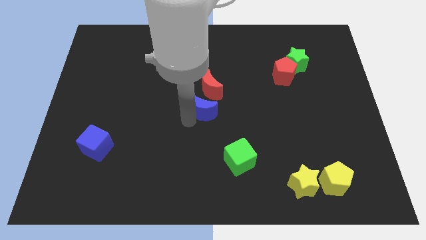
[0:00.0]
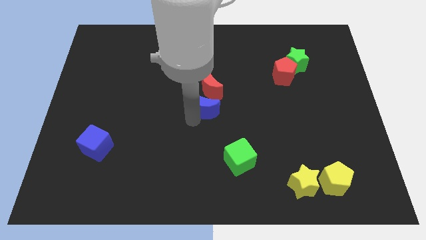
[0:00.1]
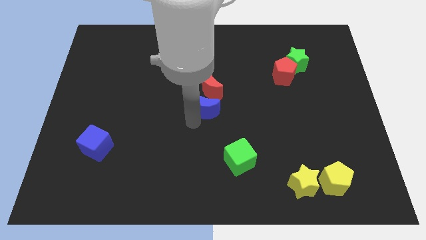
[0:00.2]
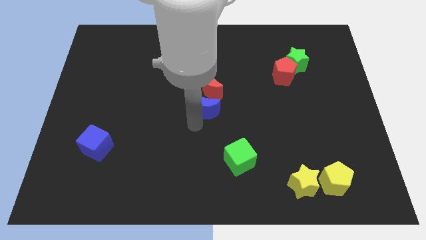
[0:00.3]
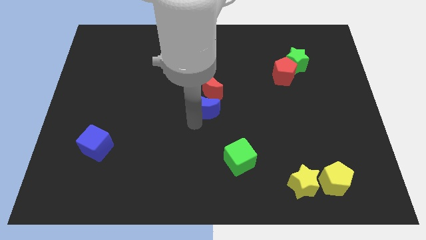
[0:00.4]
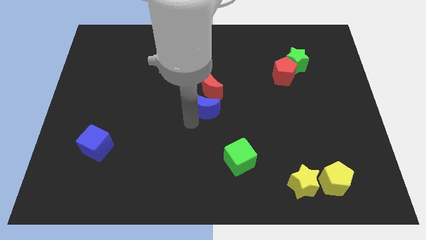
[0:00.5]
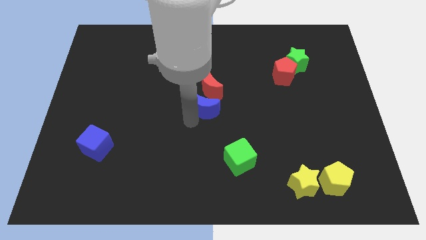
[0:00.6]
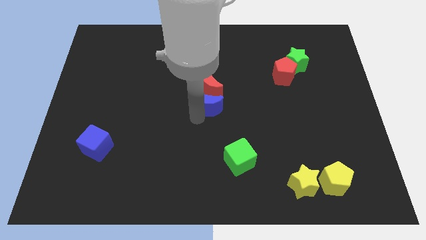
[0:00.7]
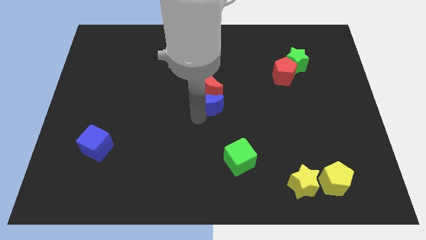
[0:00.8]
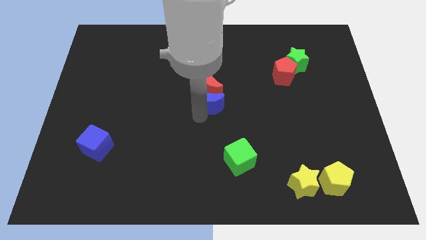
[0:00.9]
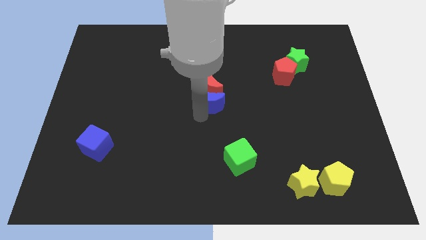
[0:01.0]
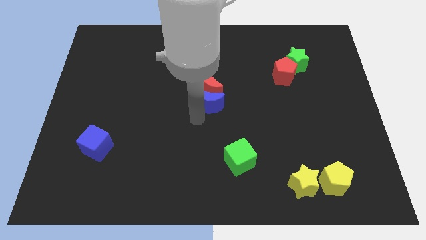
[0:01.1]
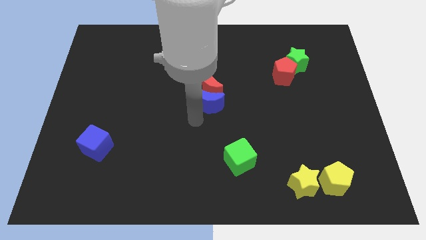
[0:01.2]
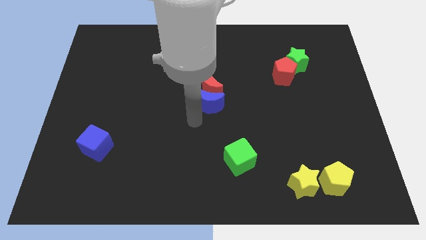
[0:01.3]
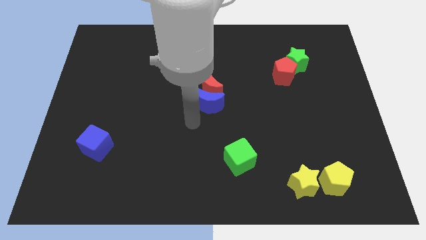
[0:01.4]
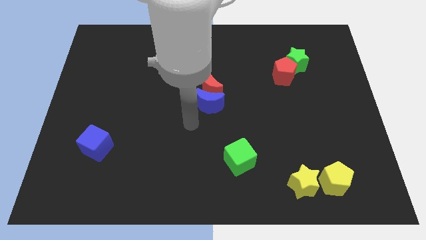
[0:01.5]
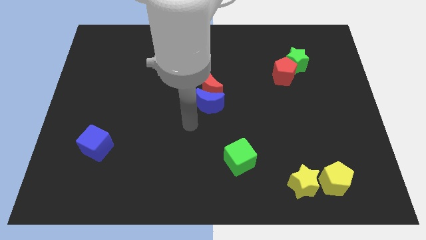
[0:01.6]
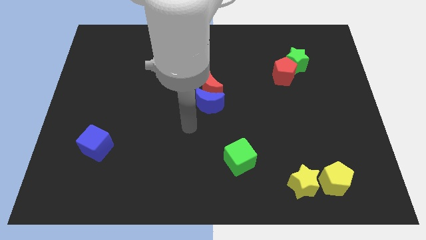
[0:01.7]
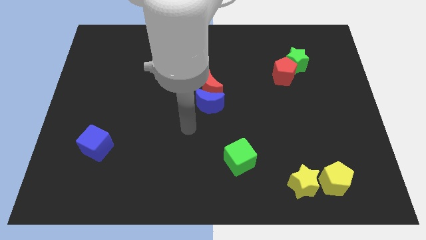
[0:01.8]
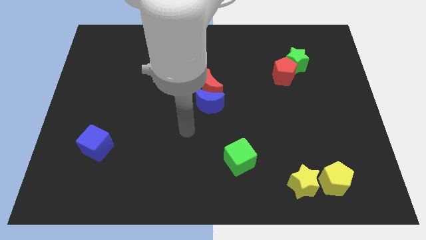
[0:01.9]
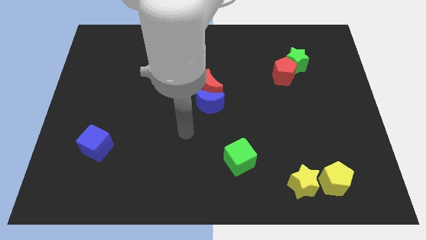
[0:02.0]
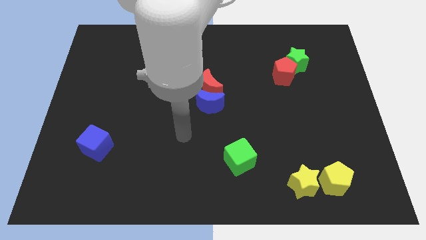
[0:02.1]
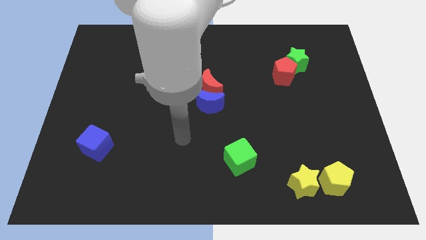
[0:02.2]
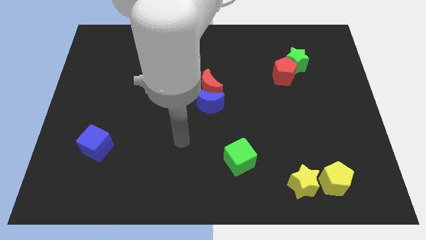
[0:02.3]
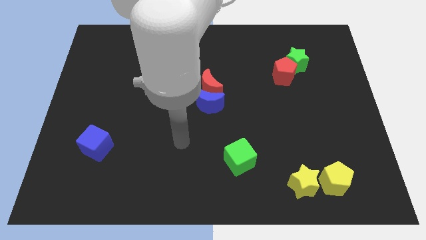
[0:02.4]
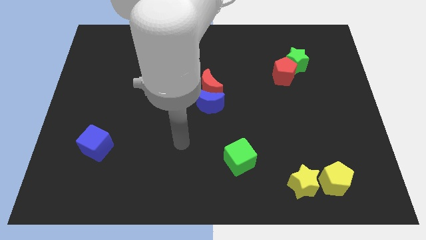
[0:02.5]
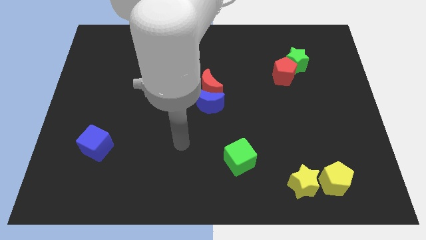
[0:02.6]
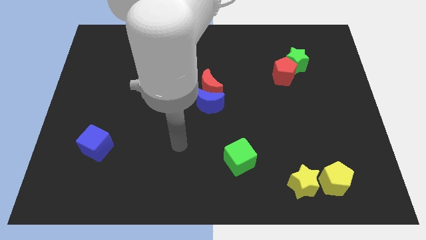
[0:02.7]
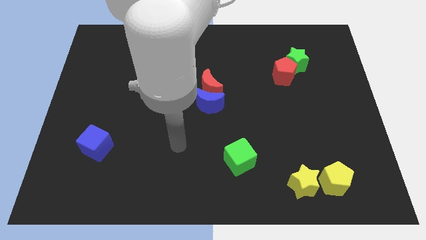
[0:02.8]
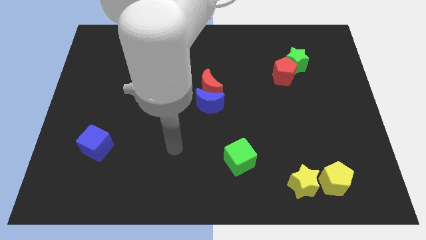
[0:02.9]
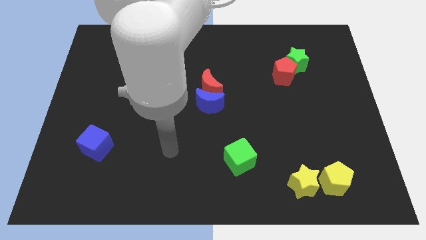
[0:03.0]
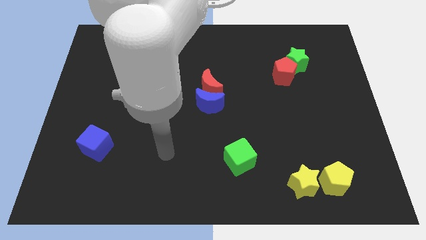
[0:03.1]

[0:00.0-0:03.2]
push blue crescent close to the red crescent

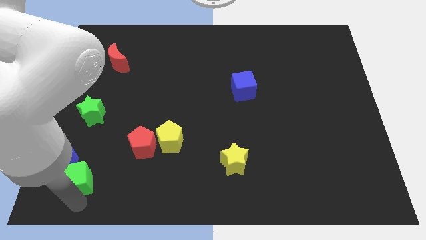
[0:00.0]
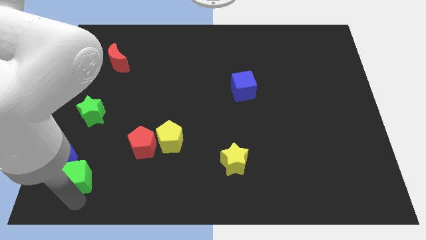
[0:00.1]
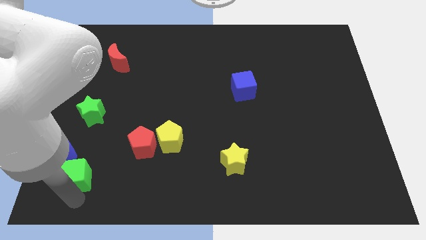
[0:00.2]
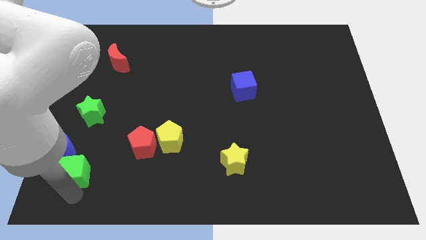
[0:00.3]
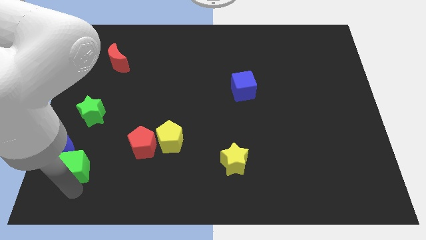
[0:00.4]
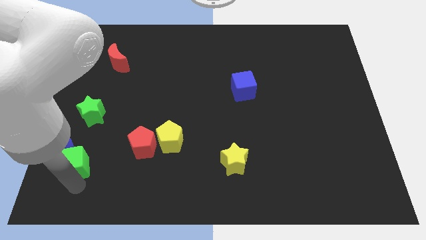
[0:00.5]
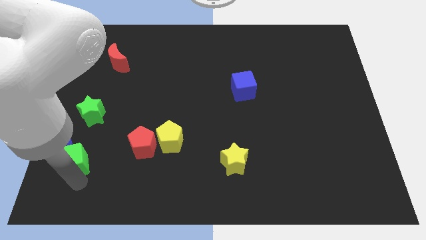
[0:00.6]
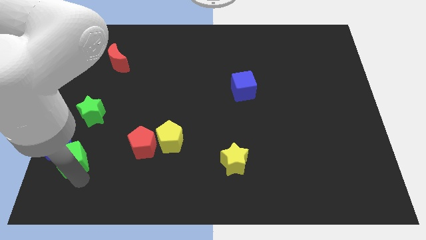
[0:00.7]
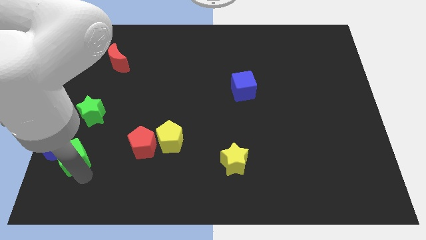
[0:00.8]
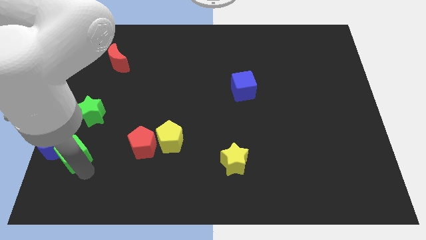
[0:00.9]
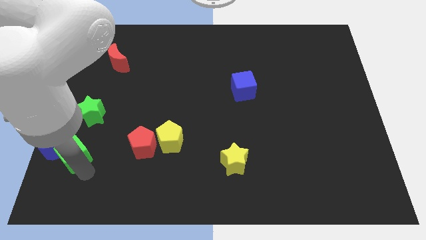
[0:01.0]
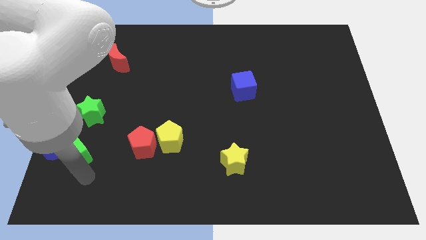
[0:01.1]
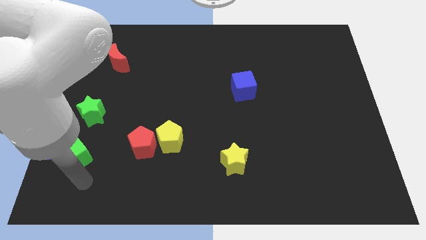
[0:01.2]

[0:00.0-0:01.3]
push green cube and blue crescent to the left of the board

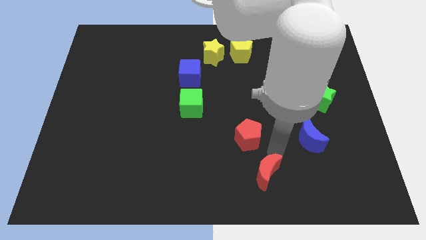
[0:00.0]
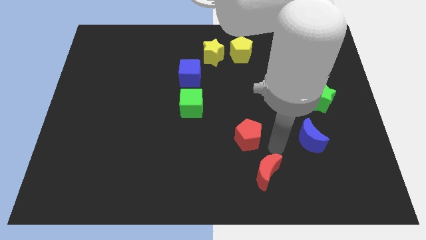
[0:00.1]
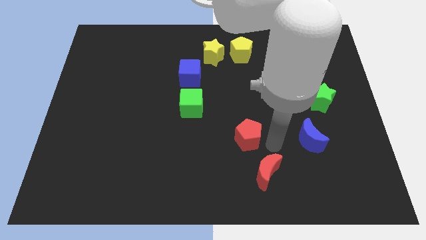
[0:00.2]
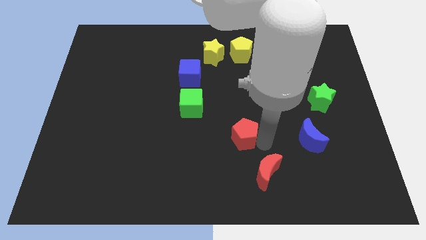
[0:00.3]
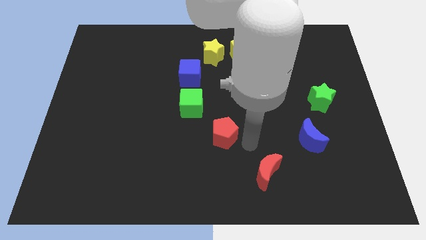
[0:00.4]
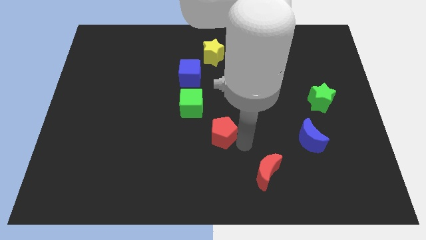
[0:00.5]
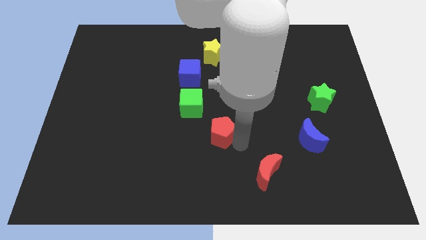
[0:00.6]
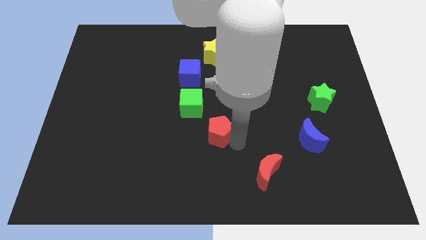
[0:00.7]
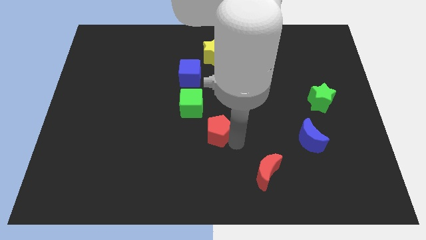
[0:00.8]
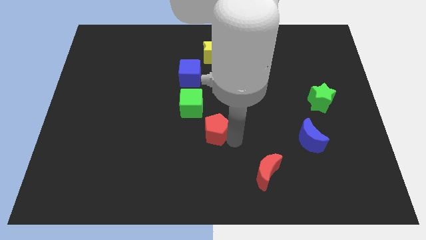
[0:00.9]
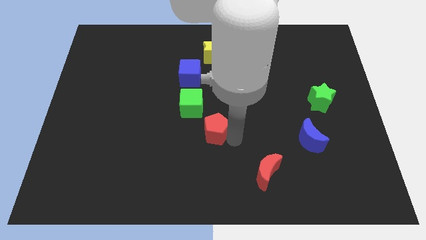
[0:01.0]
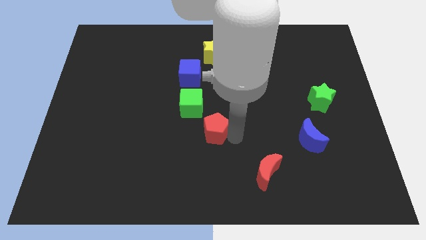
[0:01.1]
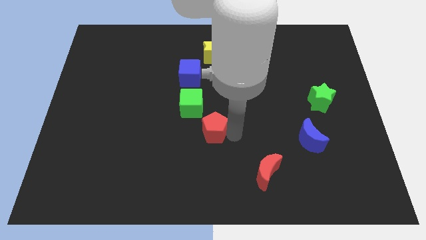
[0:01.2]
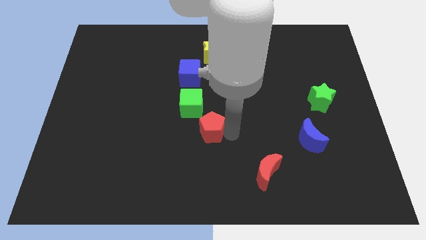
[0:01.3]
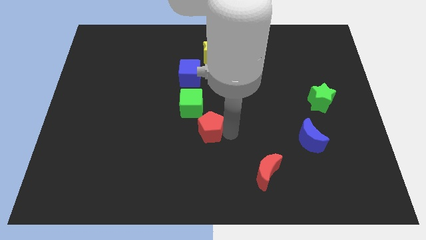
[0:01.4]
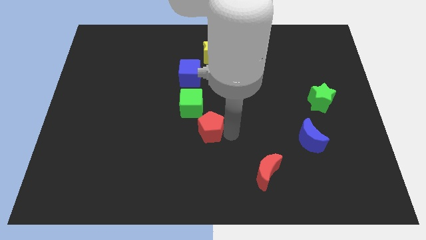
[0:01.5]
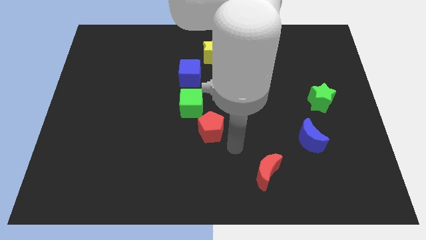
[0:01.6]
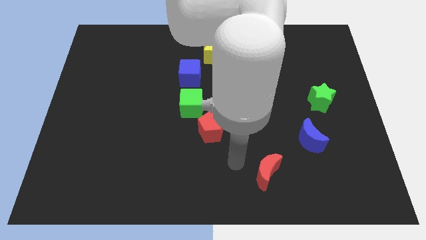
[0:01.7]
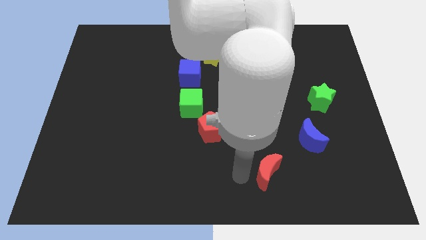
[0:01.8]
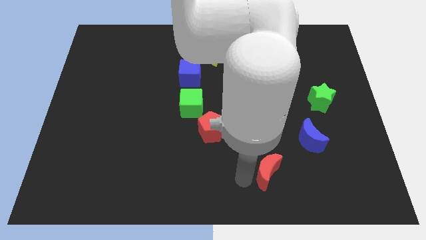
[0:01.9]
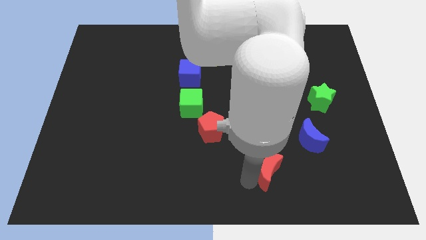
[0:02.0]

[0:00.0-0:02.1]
move red pentagon towards green cube

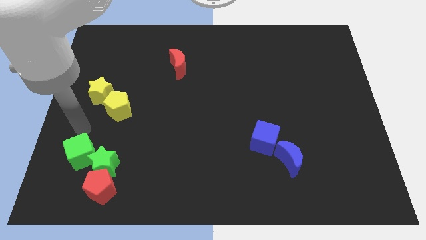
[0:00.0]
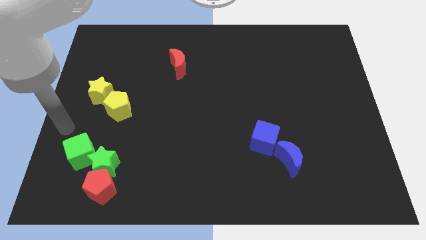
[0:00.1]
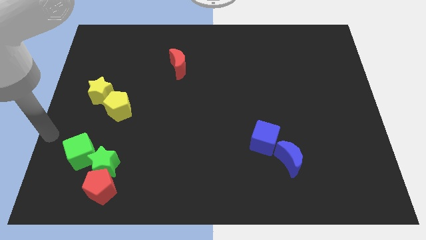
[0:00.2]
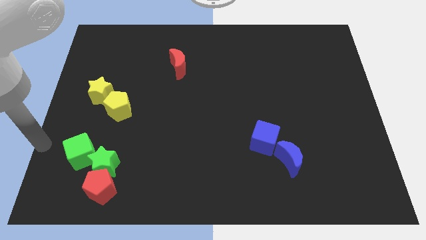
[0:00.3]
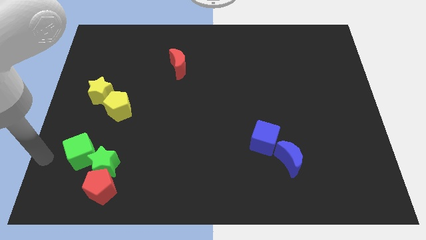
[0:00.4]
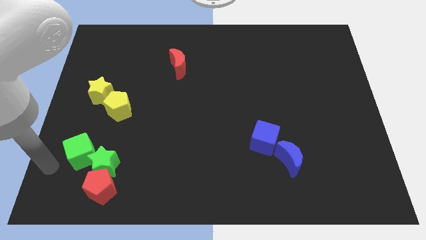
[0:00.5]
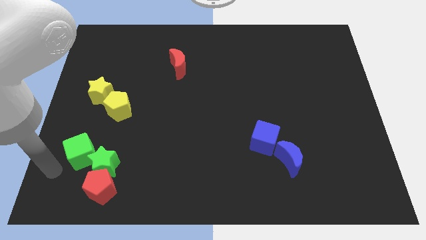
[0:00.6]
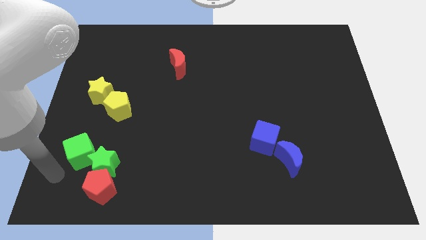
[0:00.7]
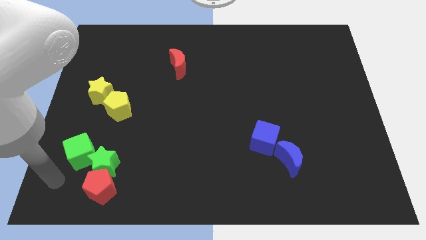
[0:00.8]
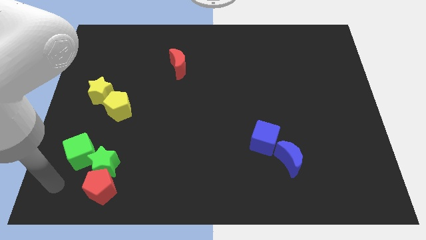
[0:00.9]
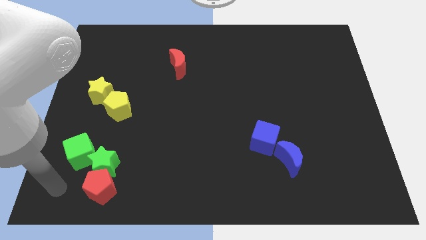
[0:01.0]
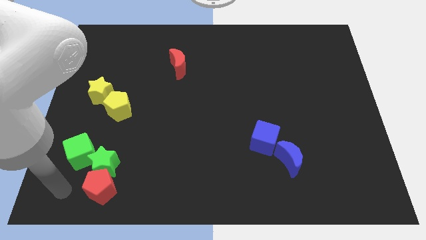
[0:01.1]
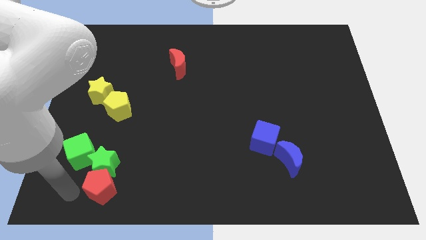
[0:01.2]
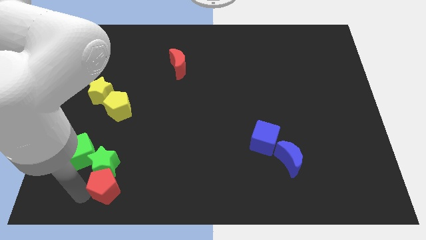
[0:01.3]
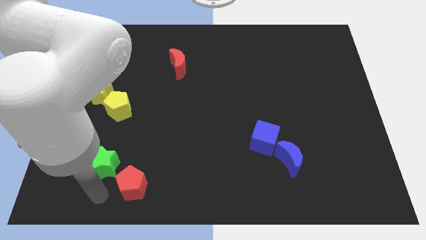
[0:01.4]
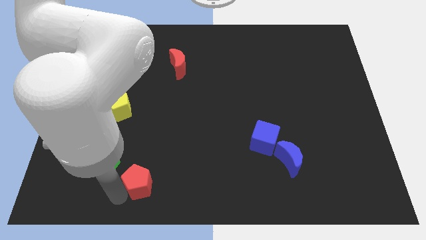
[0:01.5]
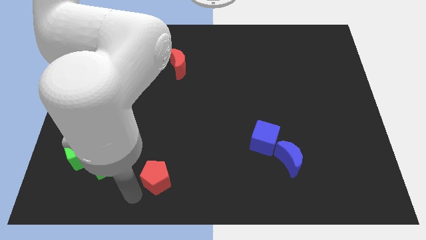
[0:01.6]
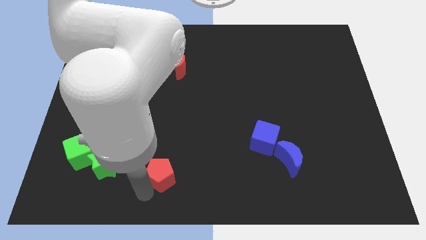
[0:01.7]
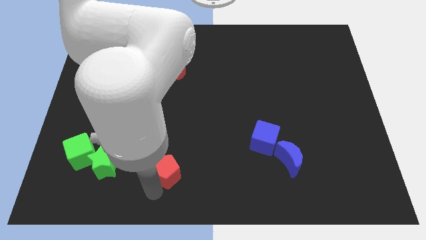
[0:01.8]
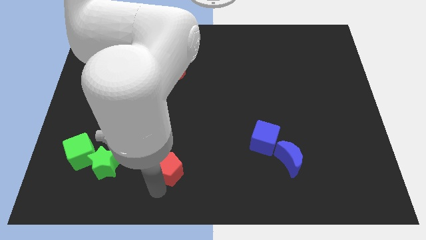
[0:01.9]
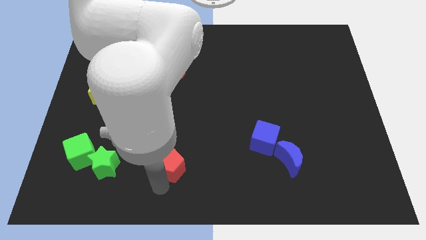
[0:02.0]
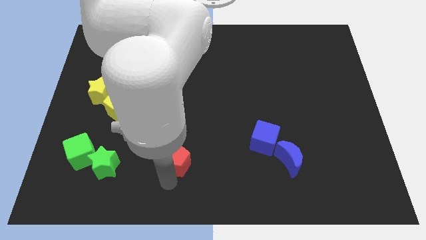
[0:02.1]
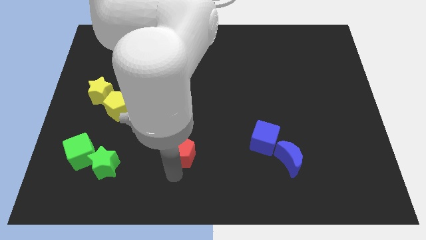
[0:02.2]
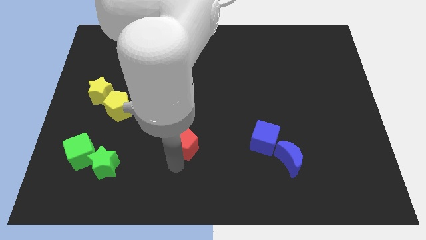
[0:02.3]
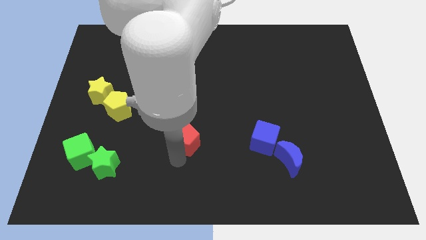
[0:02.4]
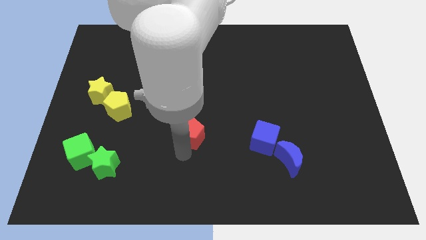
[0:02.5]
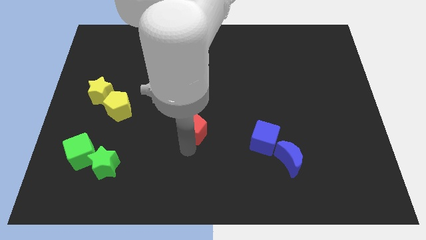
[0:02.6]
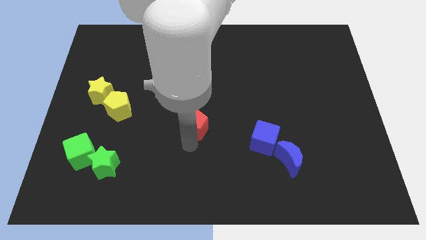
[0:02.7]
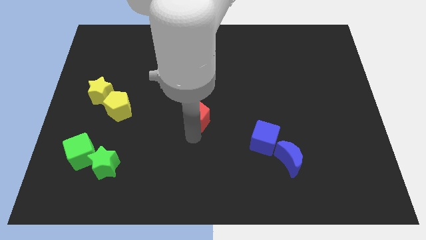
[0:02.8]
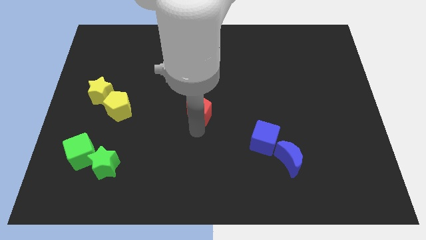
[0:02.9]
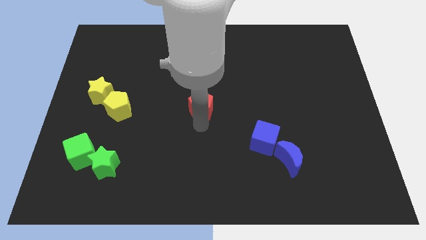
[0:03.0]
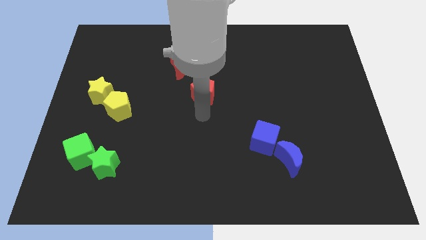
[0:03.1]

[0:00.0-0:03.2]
place the red pentagon at the center of the board
